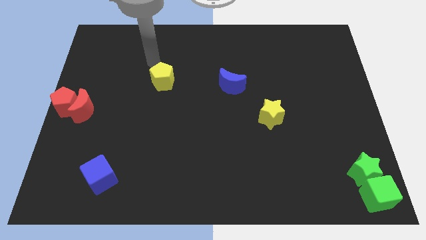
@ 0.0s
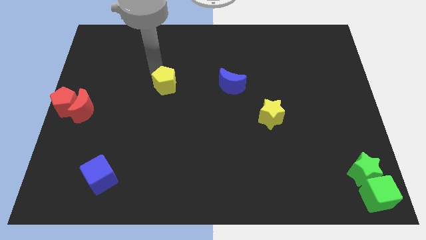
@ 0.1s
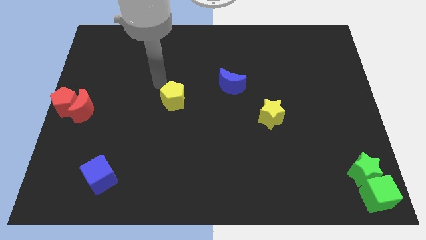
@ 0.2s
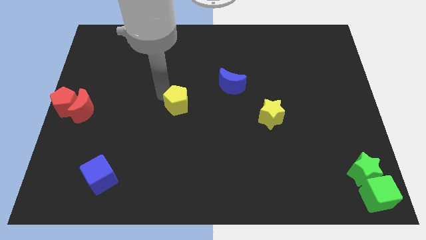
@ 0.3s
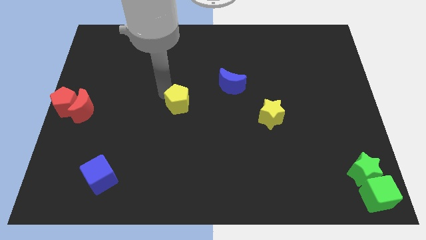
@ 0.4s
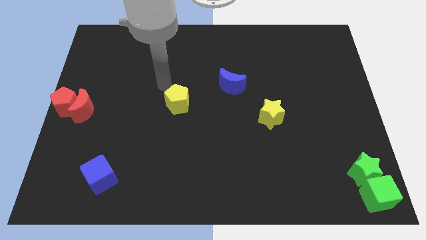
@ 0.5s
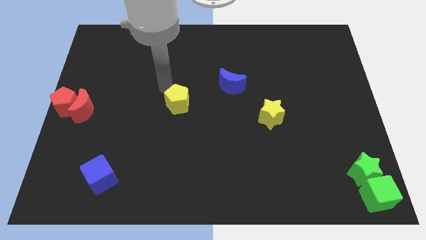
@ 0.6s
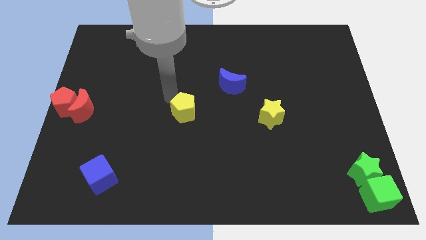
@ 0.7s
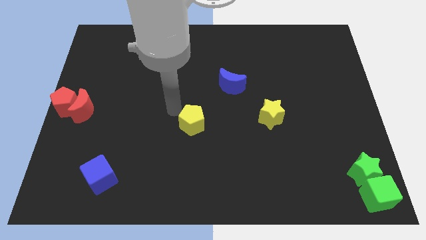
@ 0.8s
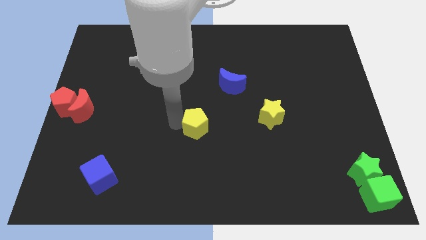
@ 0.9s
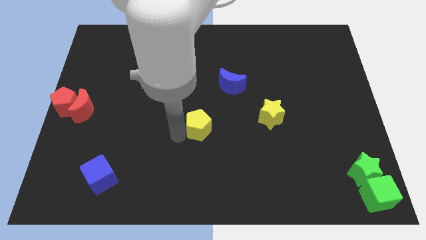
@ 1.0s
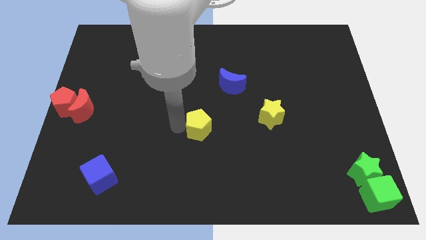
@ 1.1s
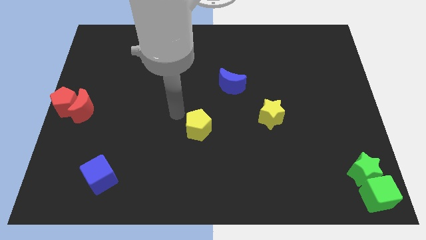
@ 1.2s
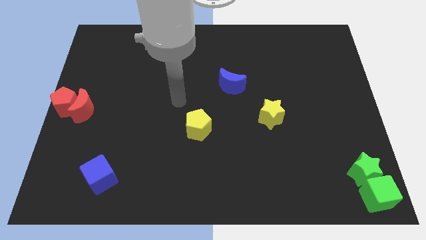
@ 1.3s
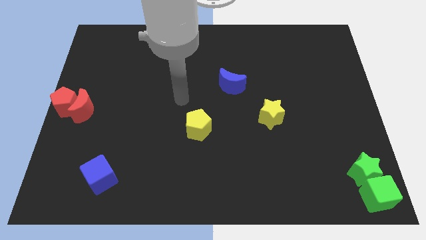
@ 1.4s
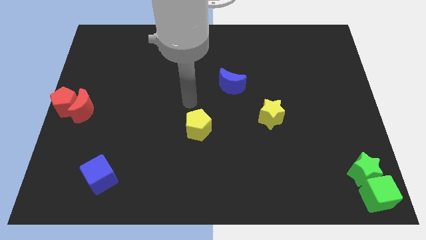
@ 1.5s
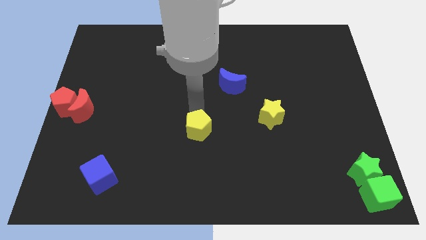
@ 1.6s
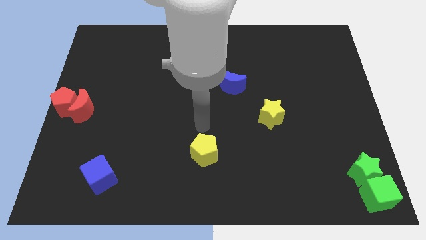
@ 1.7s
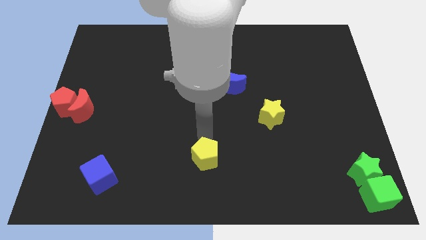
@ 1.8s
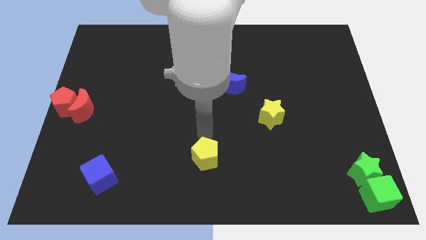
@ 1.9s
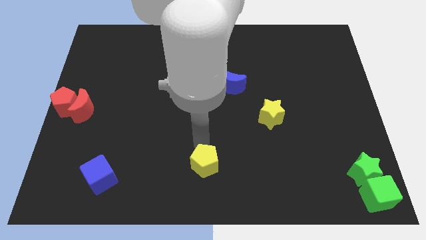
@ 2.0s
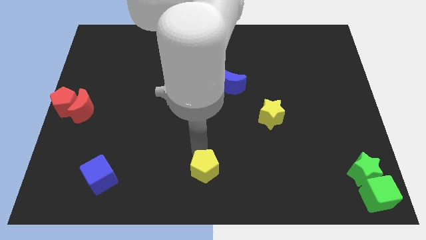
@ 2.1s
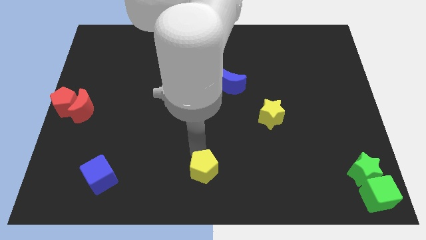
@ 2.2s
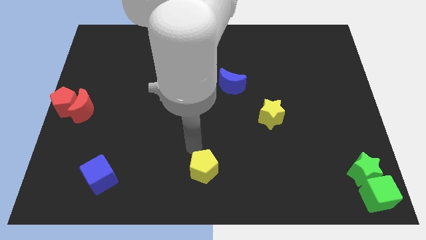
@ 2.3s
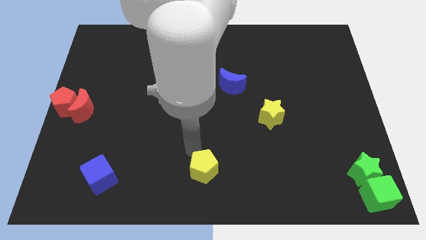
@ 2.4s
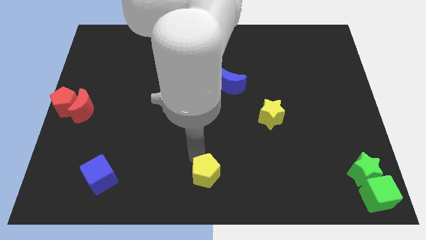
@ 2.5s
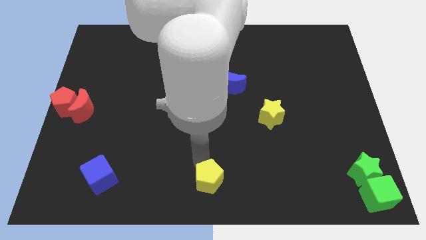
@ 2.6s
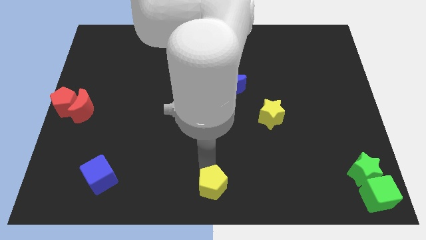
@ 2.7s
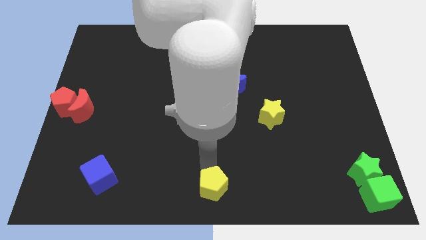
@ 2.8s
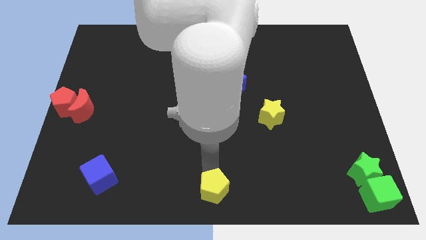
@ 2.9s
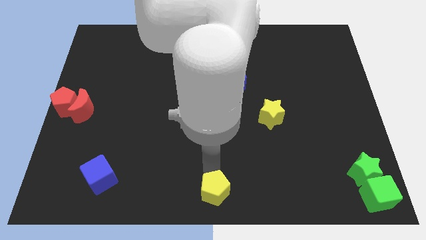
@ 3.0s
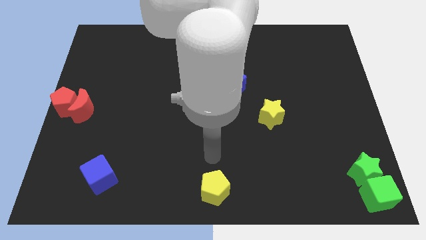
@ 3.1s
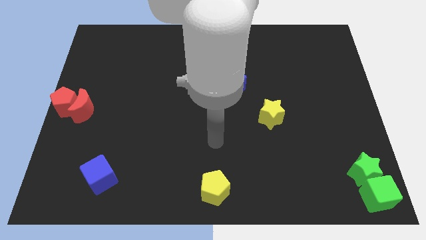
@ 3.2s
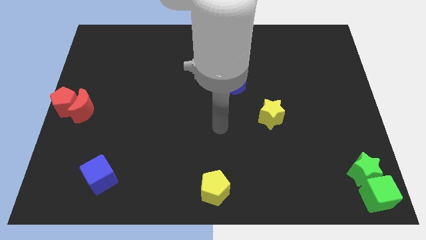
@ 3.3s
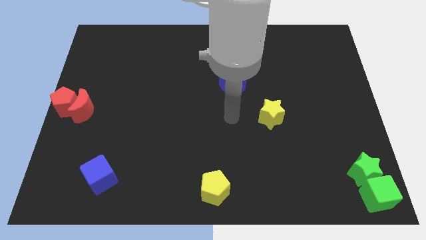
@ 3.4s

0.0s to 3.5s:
move the yellow pentagon to the bottom center of the board

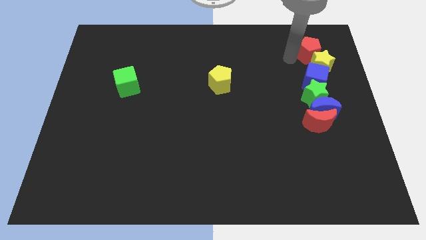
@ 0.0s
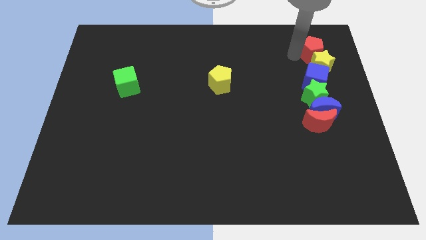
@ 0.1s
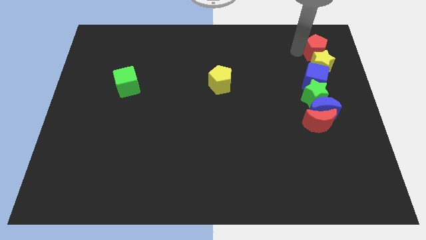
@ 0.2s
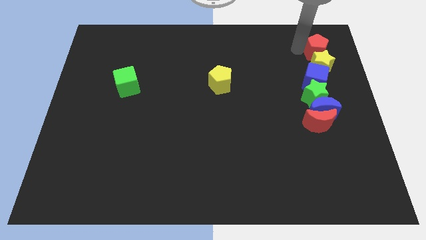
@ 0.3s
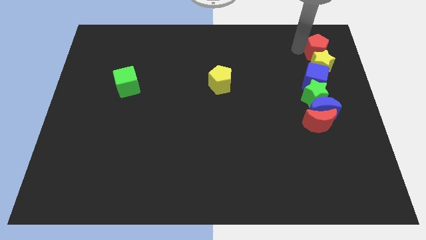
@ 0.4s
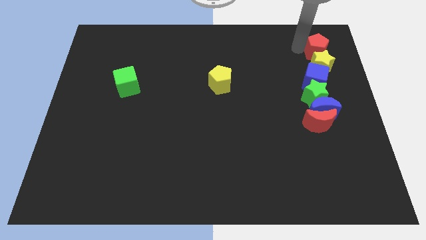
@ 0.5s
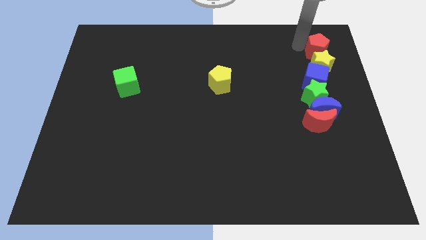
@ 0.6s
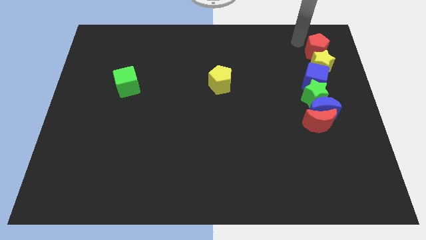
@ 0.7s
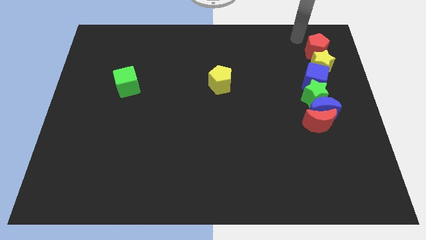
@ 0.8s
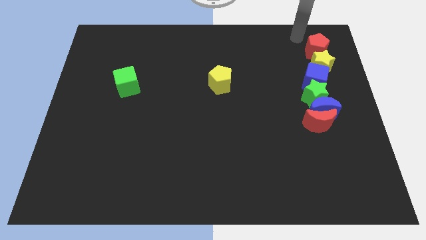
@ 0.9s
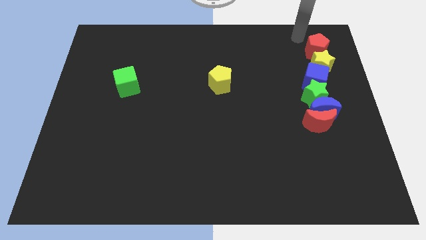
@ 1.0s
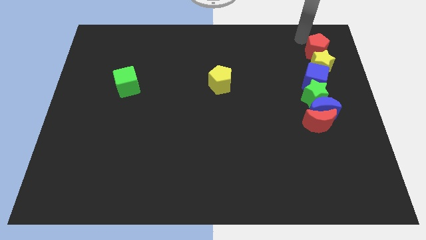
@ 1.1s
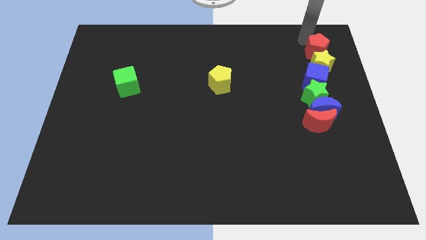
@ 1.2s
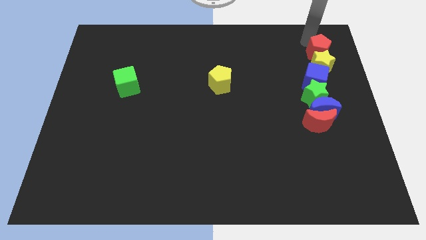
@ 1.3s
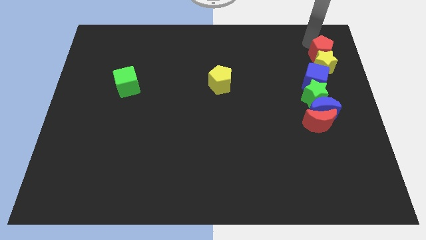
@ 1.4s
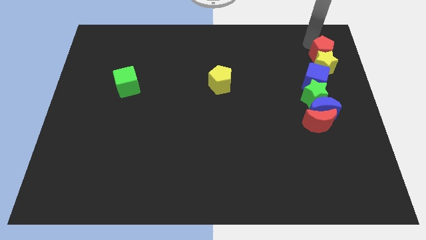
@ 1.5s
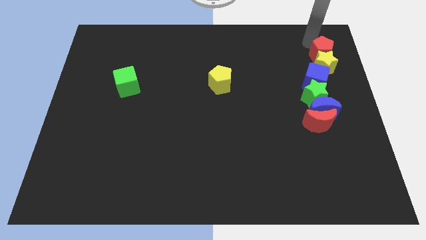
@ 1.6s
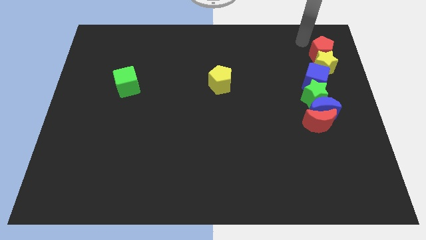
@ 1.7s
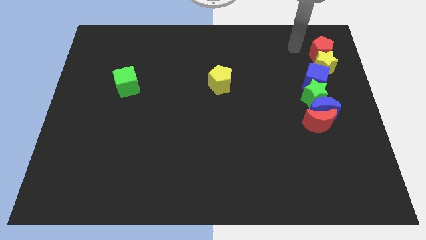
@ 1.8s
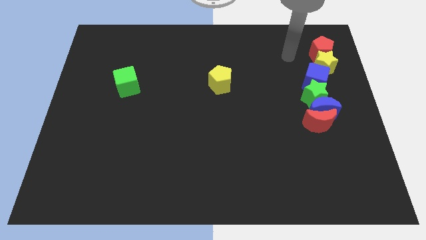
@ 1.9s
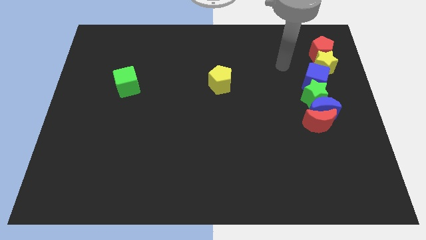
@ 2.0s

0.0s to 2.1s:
place the red penatgon on top of the yellow star

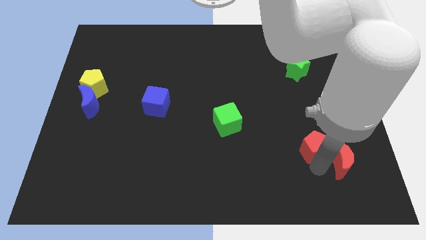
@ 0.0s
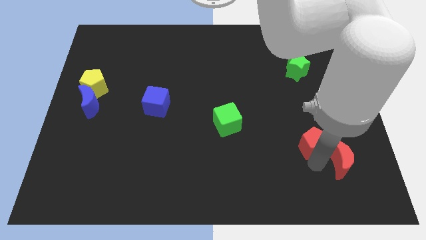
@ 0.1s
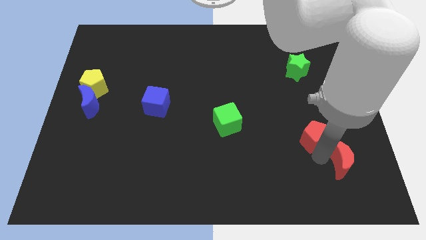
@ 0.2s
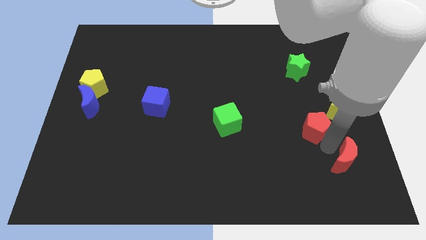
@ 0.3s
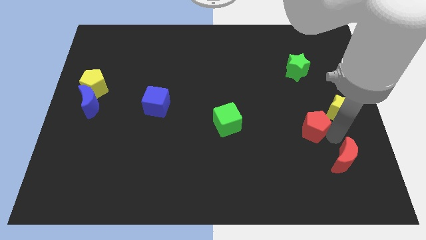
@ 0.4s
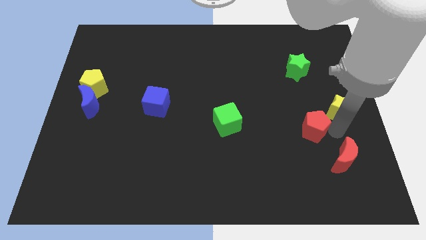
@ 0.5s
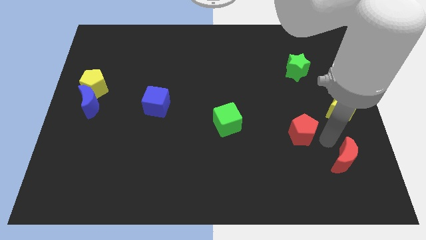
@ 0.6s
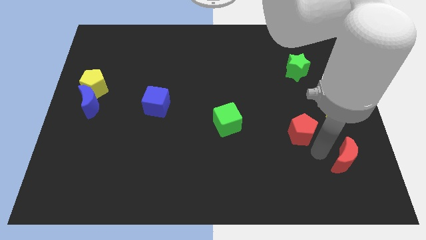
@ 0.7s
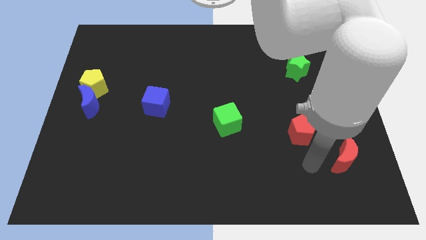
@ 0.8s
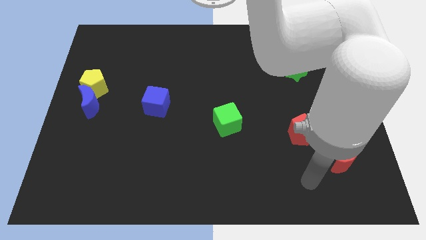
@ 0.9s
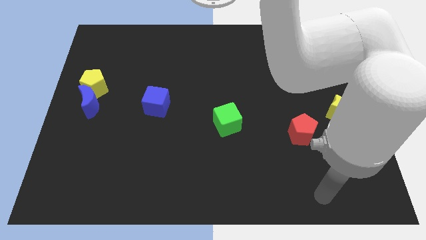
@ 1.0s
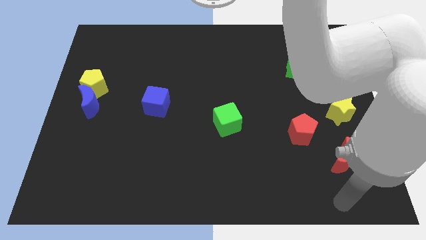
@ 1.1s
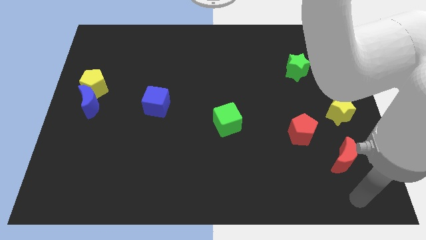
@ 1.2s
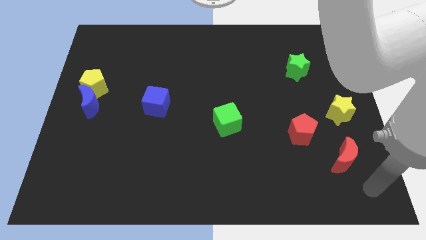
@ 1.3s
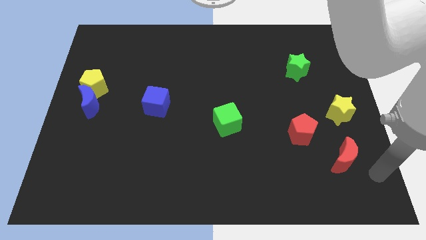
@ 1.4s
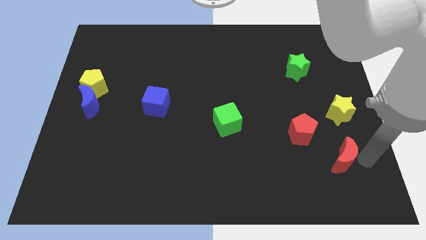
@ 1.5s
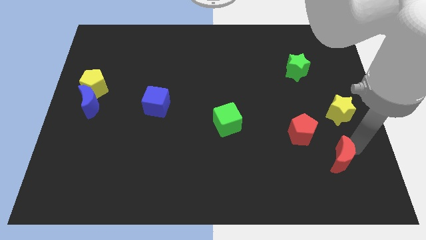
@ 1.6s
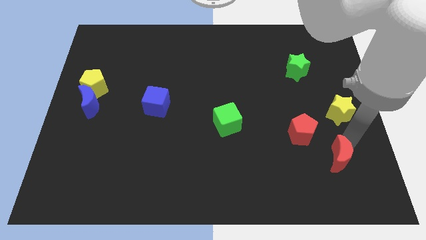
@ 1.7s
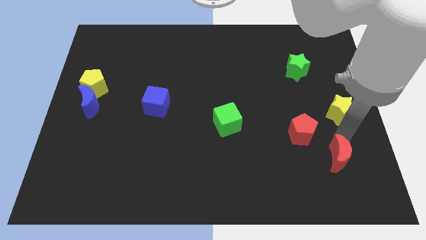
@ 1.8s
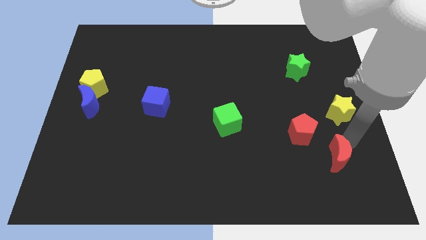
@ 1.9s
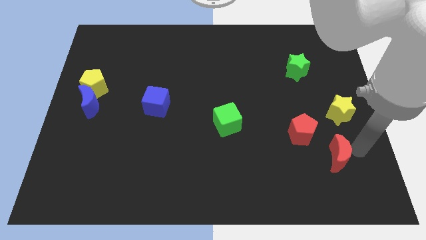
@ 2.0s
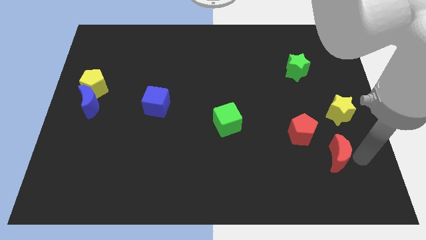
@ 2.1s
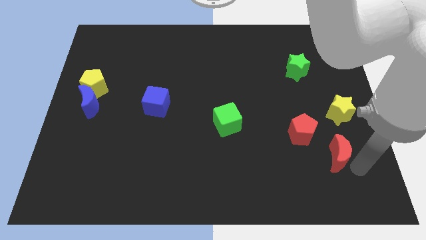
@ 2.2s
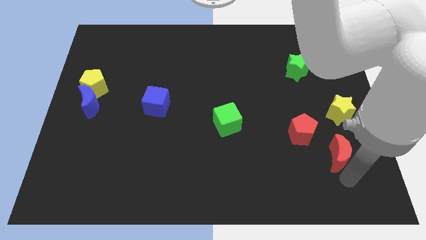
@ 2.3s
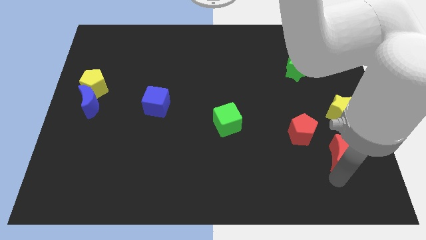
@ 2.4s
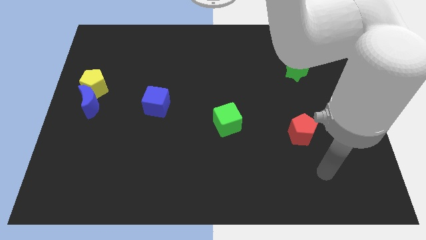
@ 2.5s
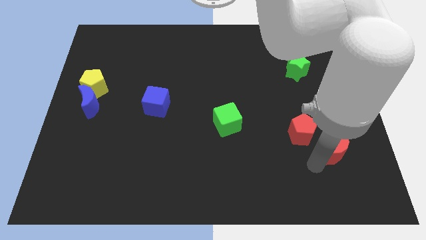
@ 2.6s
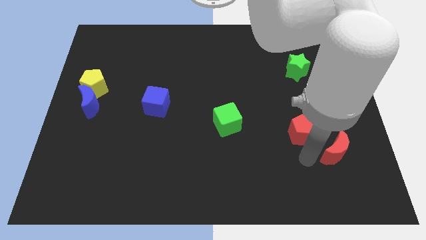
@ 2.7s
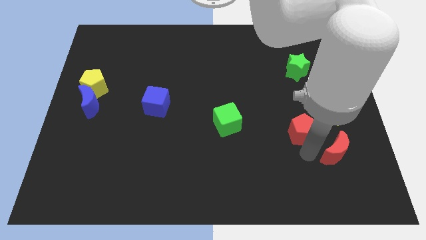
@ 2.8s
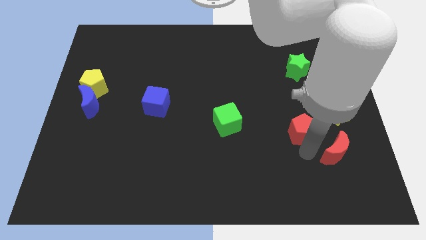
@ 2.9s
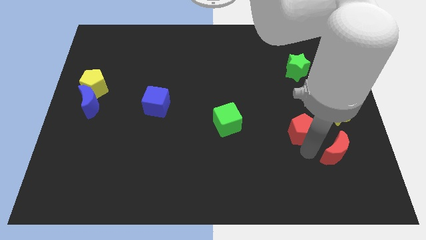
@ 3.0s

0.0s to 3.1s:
separate red pentagon from the red moon

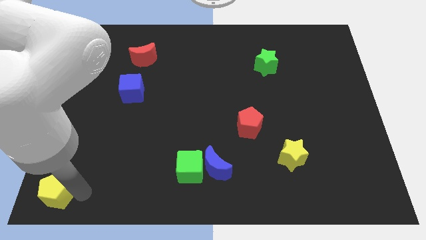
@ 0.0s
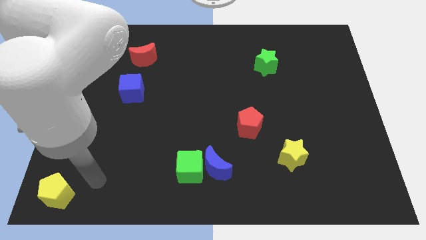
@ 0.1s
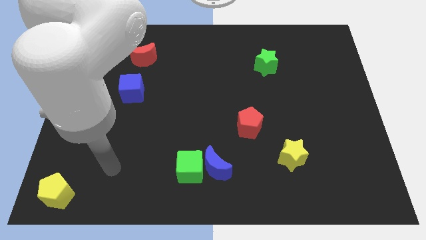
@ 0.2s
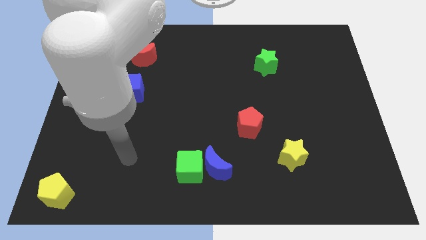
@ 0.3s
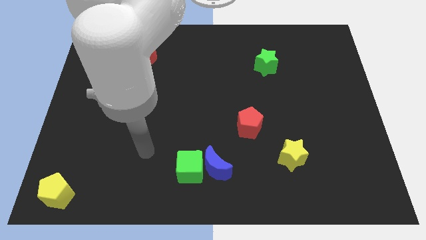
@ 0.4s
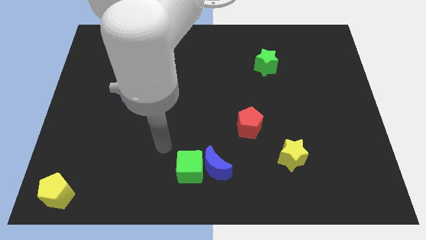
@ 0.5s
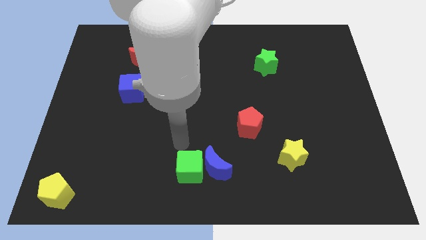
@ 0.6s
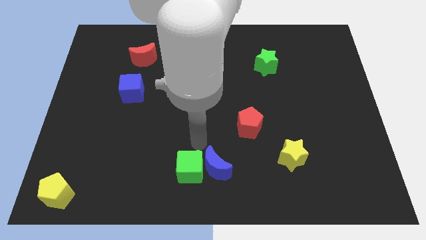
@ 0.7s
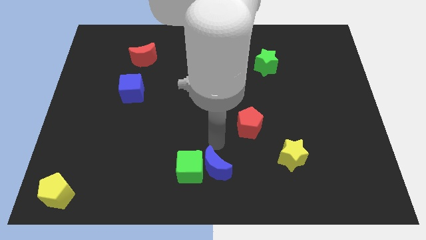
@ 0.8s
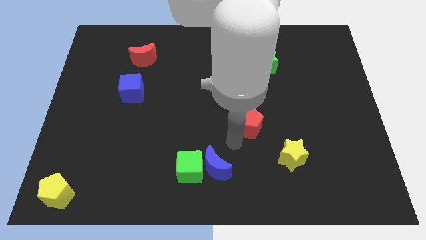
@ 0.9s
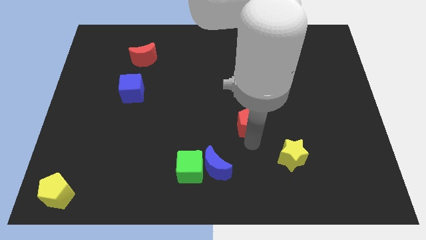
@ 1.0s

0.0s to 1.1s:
place arm on the bottom of red pentagon
